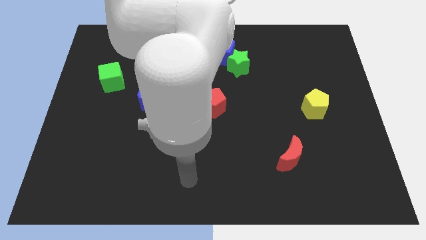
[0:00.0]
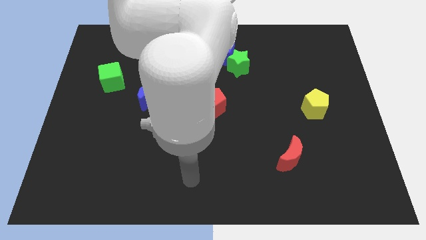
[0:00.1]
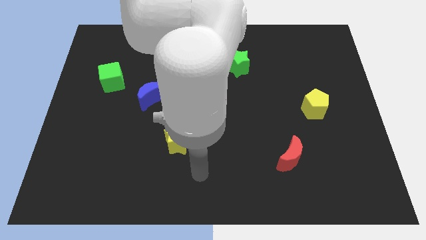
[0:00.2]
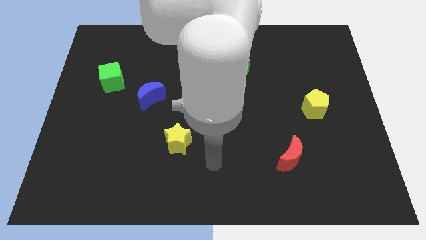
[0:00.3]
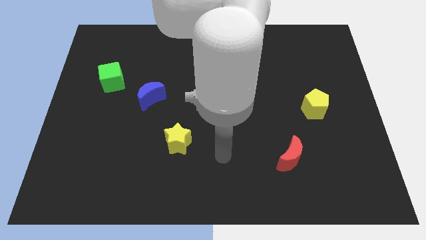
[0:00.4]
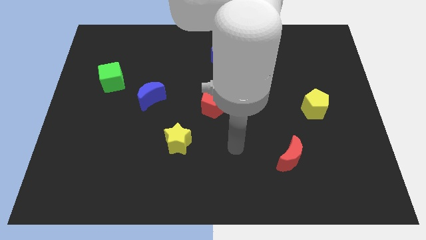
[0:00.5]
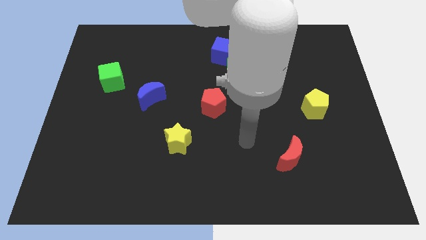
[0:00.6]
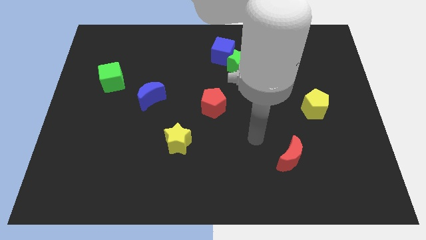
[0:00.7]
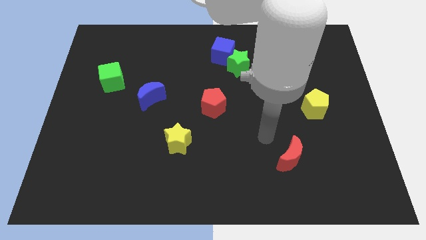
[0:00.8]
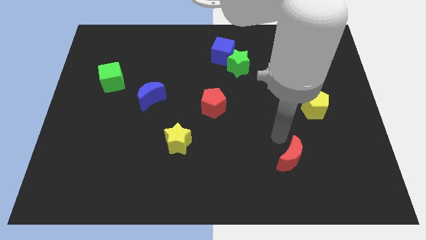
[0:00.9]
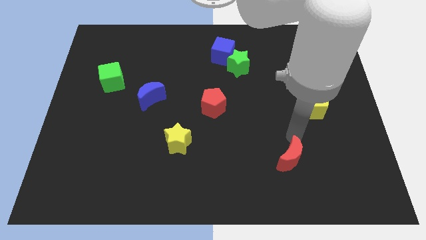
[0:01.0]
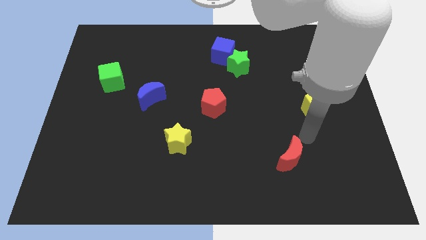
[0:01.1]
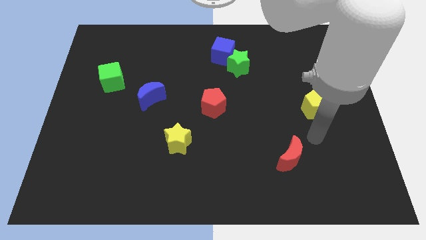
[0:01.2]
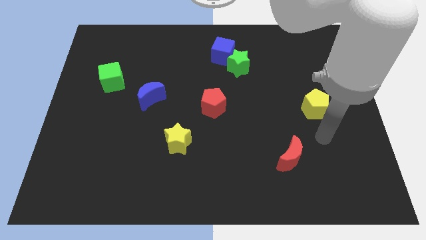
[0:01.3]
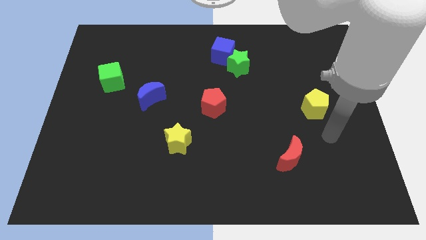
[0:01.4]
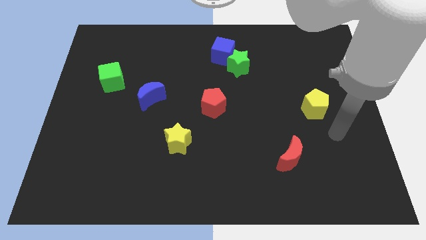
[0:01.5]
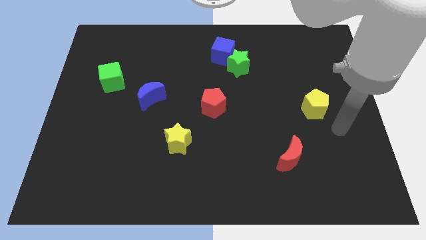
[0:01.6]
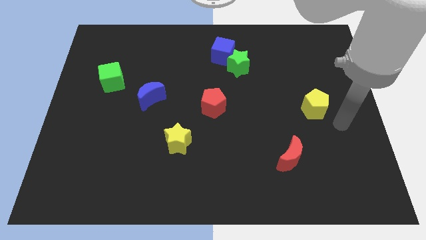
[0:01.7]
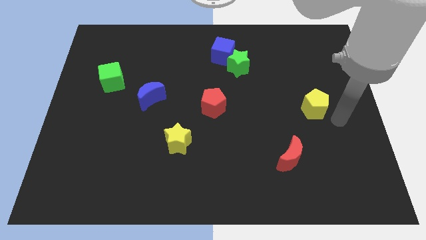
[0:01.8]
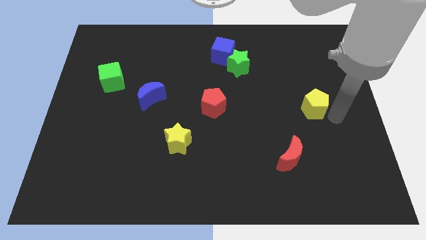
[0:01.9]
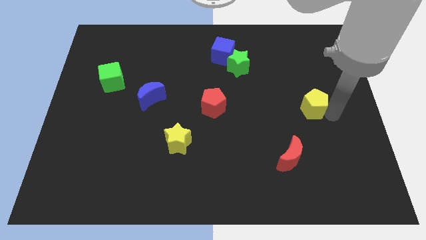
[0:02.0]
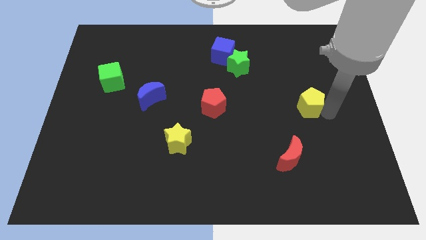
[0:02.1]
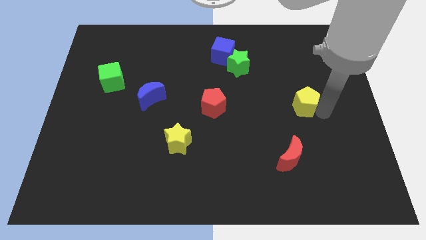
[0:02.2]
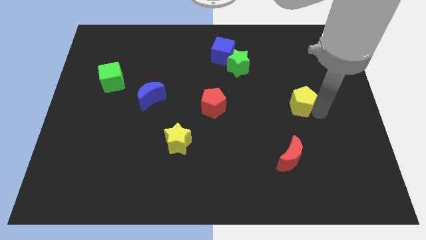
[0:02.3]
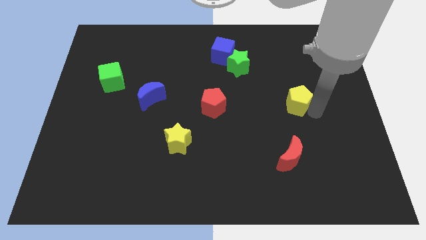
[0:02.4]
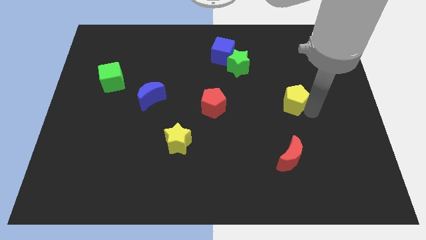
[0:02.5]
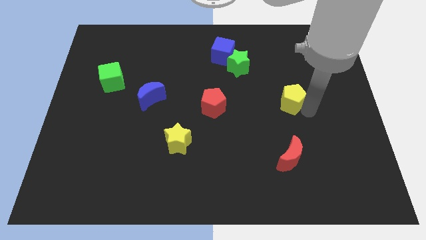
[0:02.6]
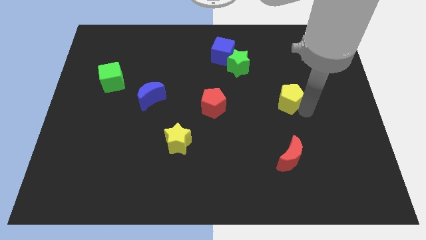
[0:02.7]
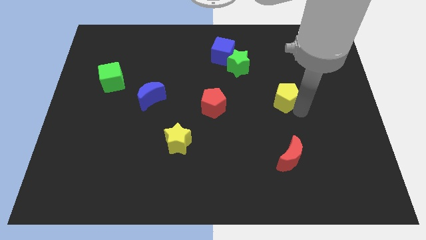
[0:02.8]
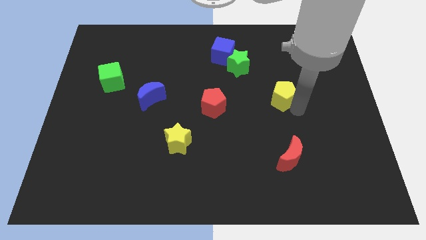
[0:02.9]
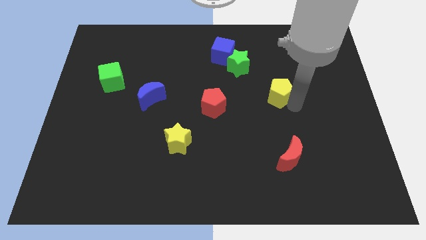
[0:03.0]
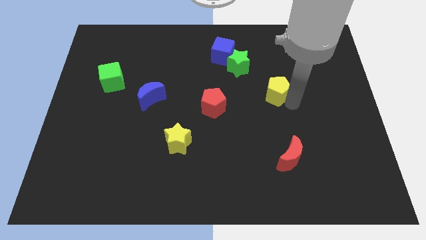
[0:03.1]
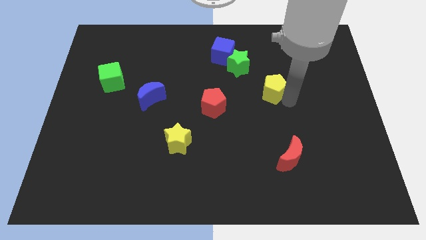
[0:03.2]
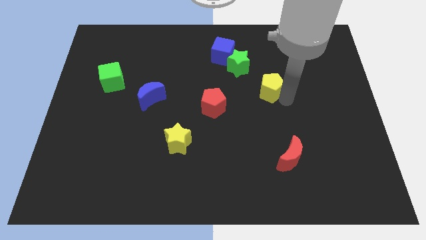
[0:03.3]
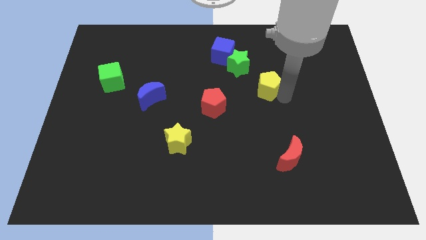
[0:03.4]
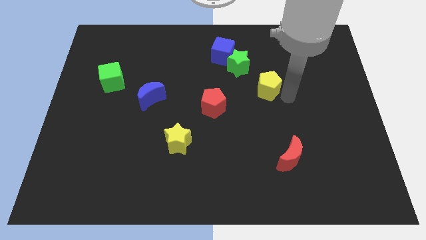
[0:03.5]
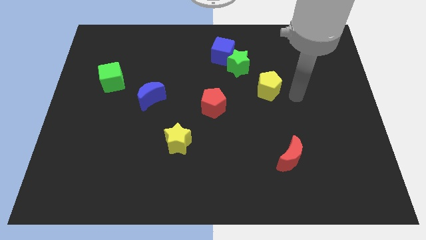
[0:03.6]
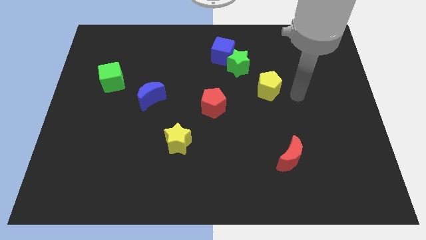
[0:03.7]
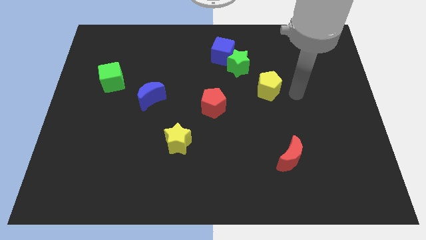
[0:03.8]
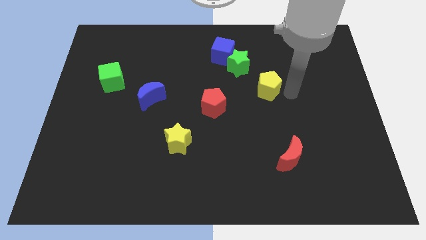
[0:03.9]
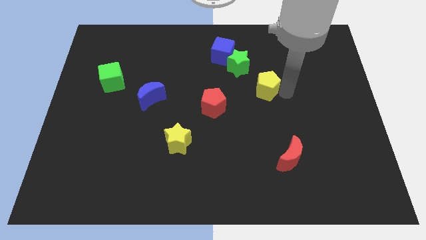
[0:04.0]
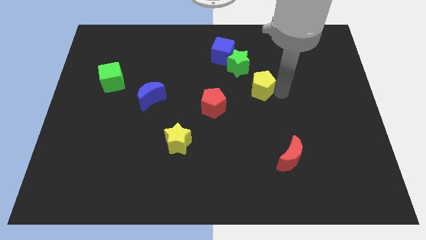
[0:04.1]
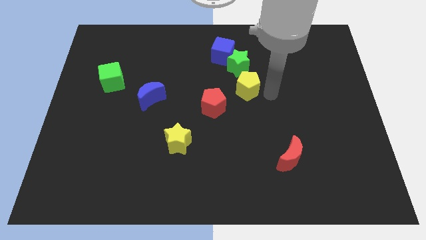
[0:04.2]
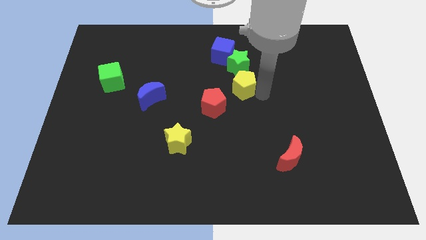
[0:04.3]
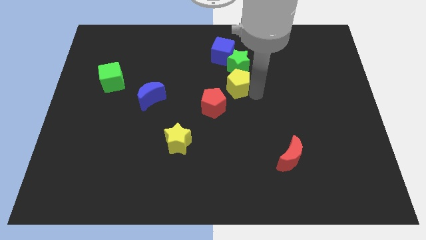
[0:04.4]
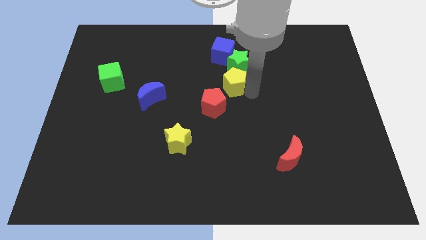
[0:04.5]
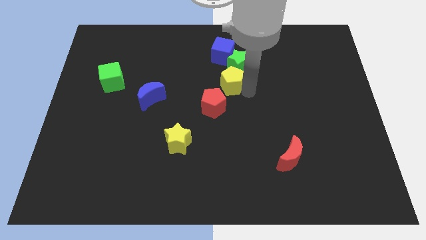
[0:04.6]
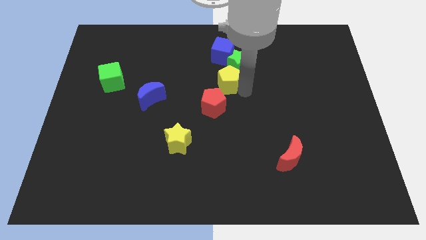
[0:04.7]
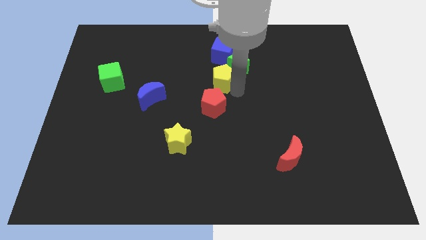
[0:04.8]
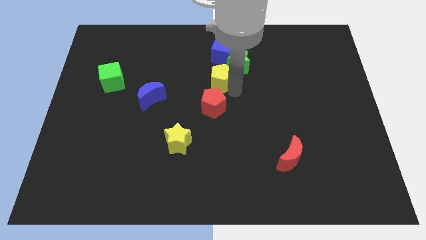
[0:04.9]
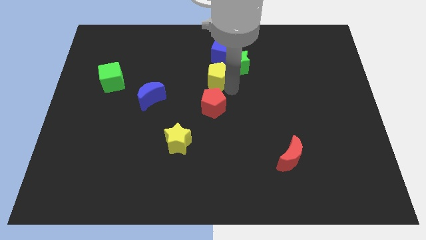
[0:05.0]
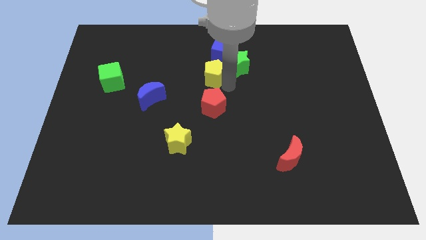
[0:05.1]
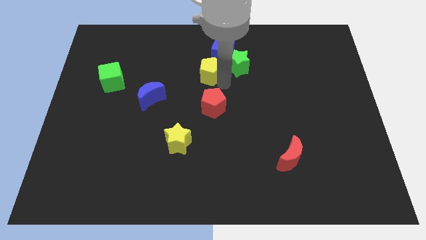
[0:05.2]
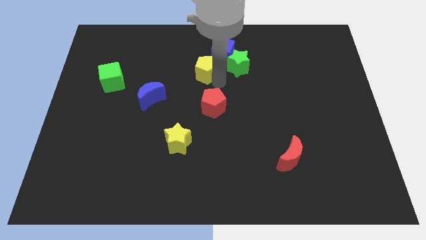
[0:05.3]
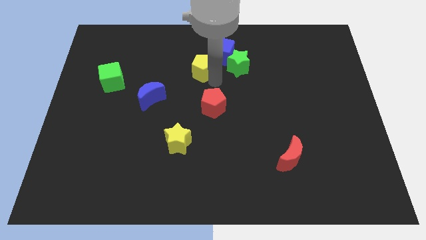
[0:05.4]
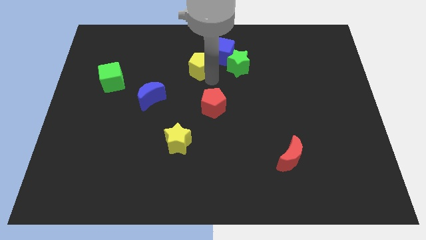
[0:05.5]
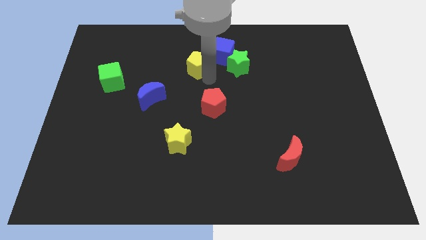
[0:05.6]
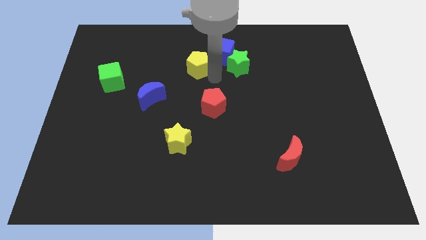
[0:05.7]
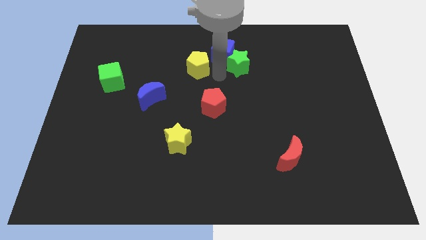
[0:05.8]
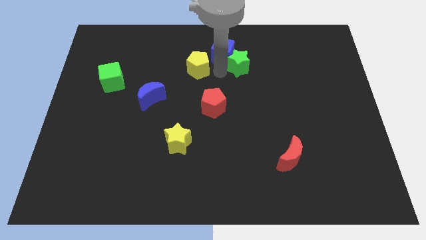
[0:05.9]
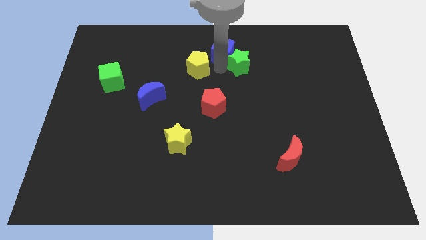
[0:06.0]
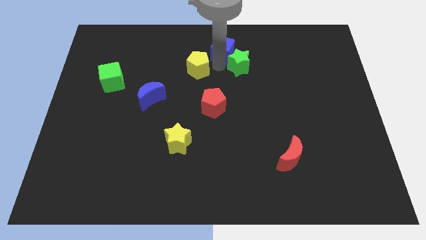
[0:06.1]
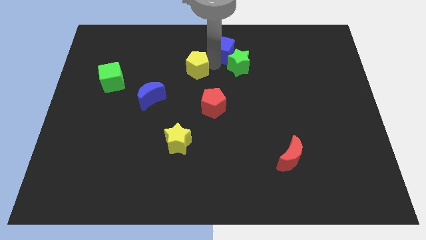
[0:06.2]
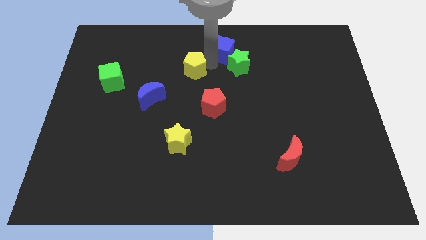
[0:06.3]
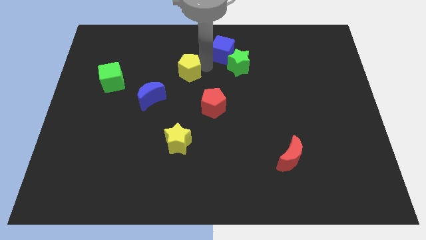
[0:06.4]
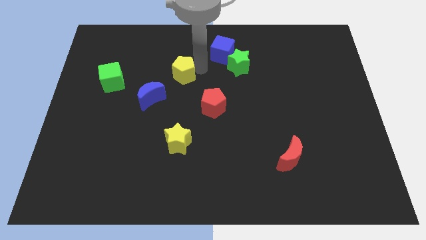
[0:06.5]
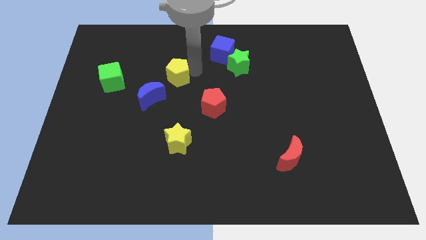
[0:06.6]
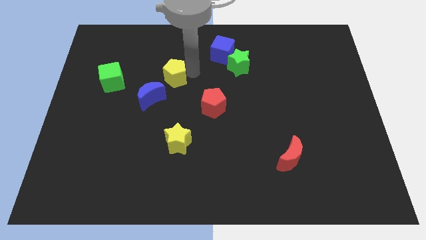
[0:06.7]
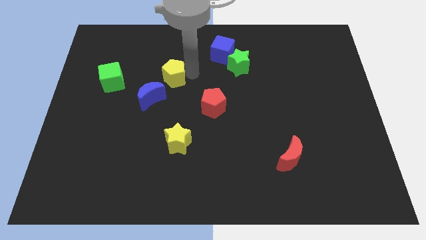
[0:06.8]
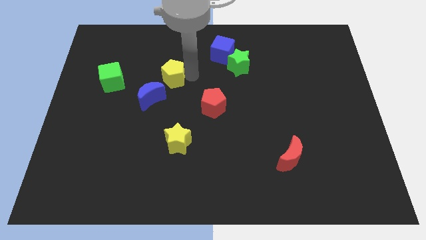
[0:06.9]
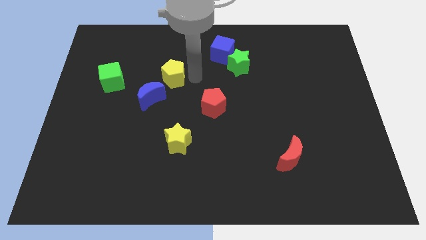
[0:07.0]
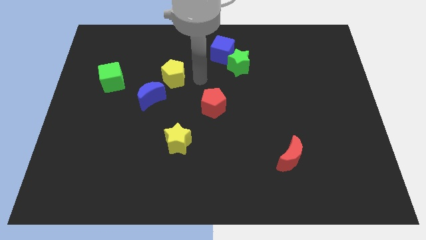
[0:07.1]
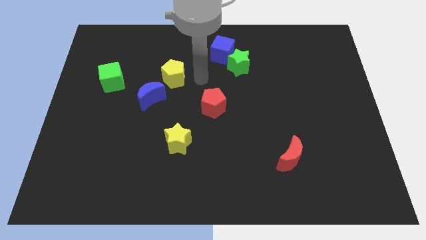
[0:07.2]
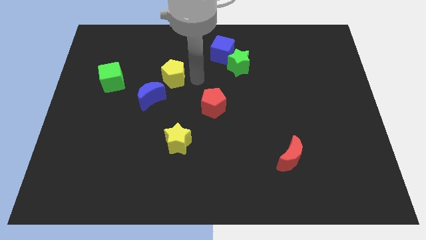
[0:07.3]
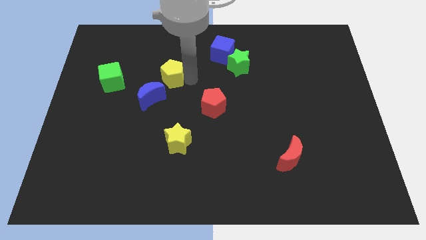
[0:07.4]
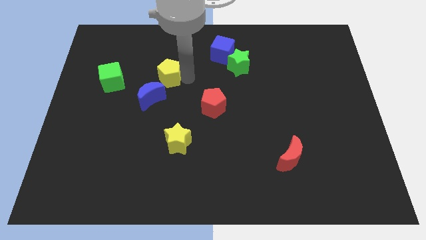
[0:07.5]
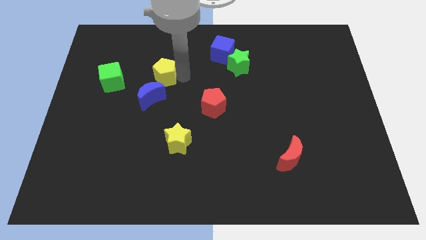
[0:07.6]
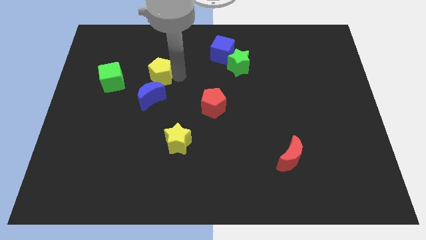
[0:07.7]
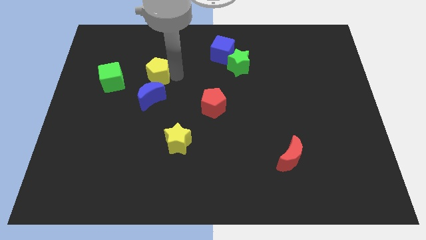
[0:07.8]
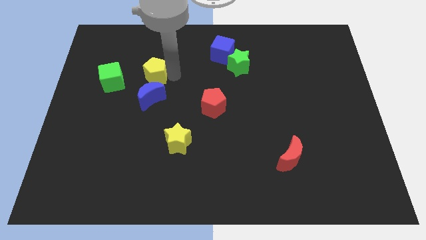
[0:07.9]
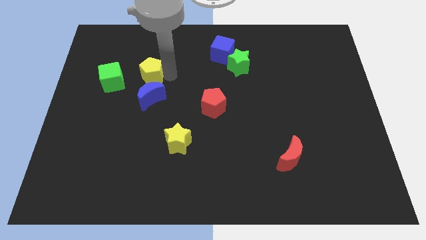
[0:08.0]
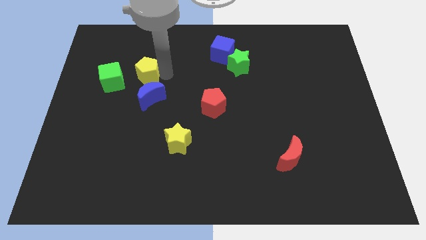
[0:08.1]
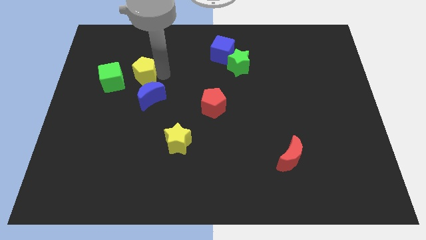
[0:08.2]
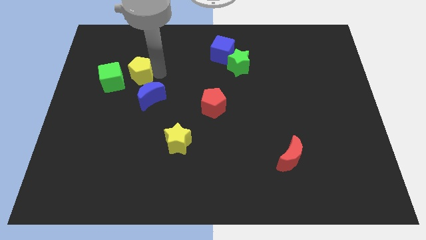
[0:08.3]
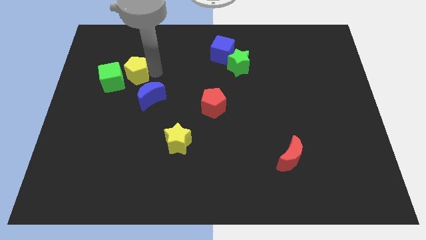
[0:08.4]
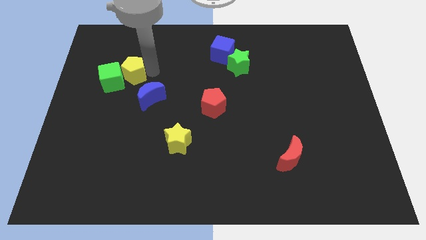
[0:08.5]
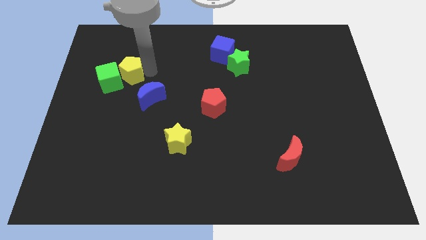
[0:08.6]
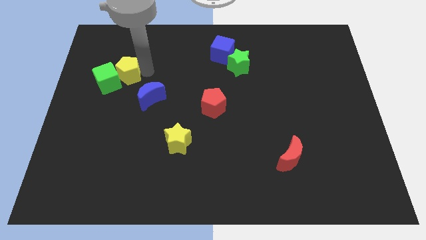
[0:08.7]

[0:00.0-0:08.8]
move the yellow pentagon close to the green cube

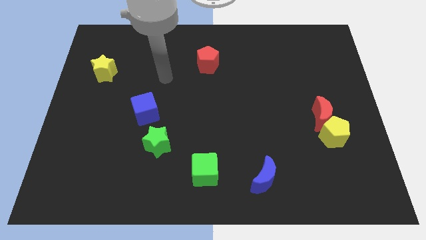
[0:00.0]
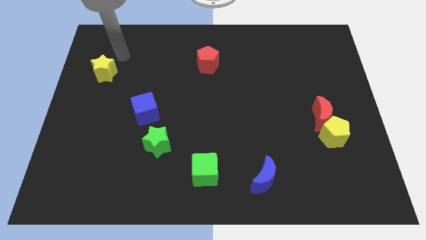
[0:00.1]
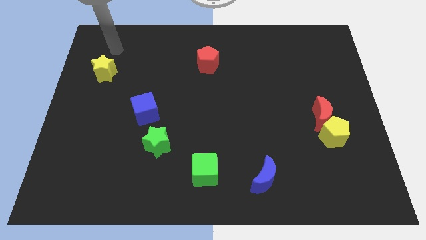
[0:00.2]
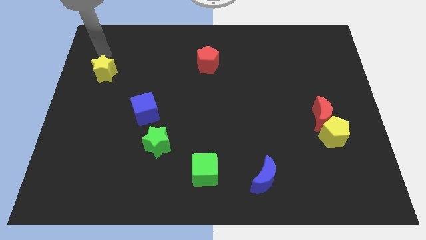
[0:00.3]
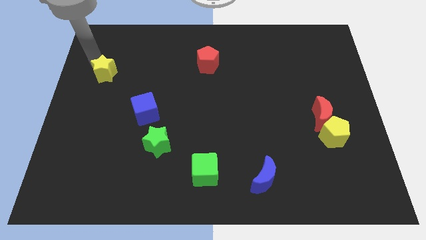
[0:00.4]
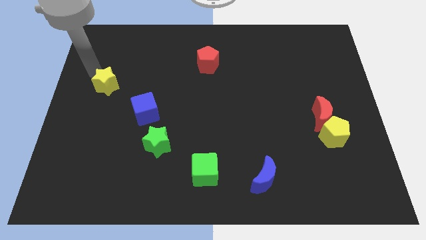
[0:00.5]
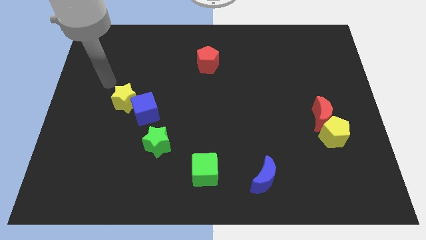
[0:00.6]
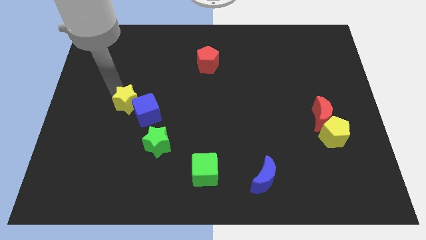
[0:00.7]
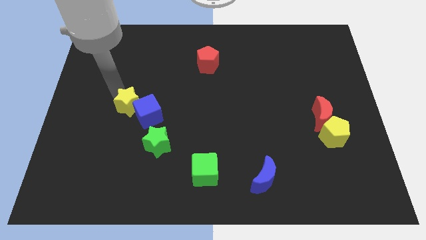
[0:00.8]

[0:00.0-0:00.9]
move the yellow star to the blue cube
